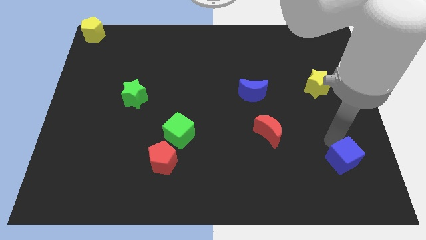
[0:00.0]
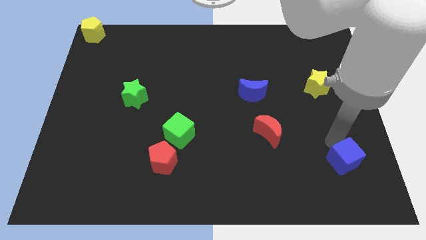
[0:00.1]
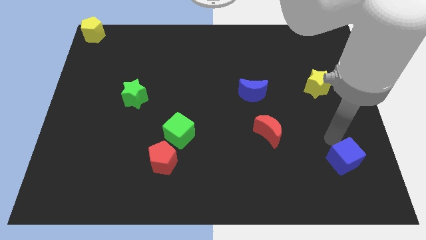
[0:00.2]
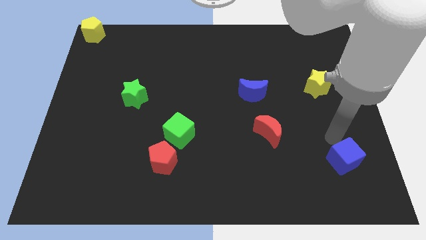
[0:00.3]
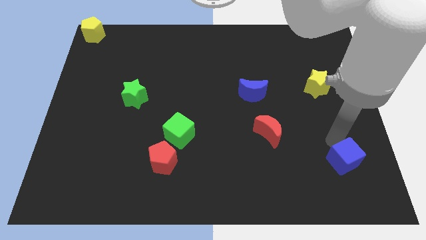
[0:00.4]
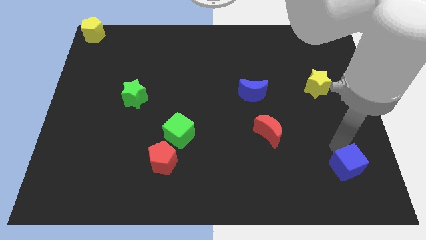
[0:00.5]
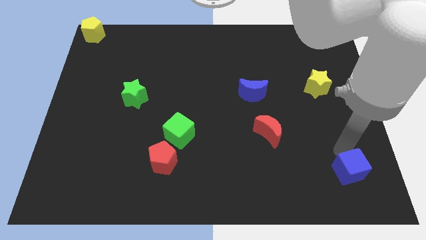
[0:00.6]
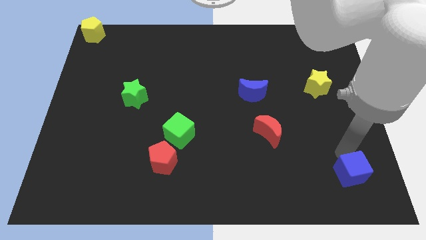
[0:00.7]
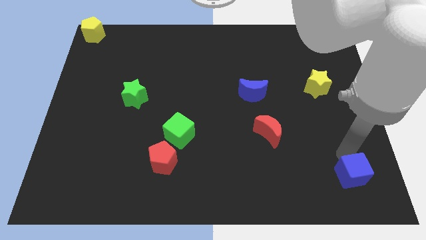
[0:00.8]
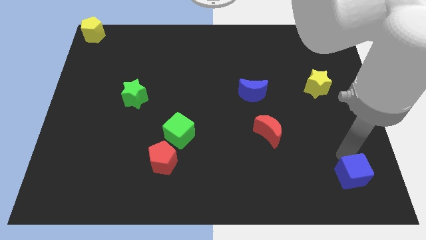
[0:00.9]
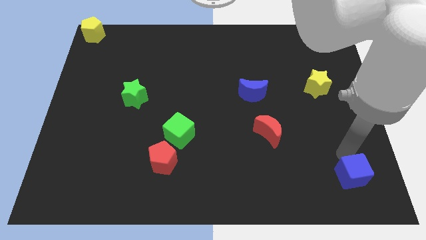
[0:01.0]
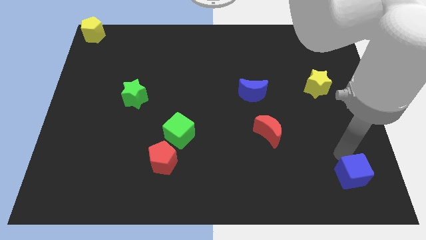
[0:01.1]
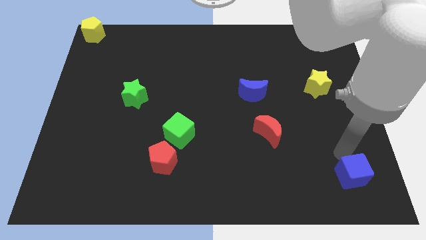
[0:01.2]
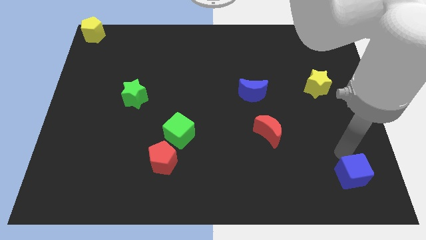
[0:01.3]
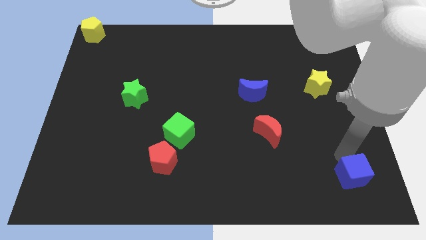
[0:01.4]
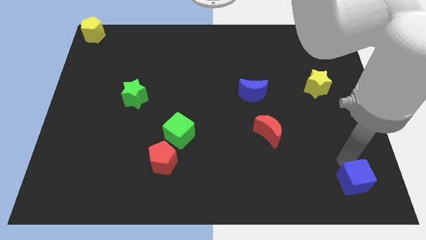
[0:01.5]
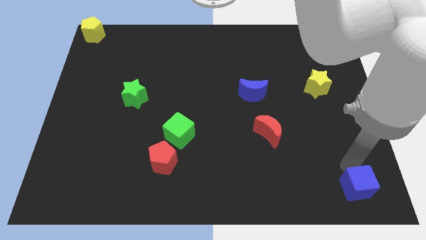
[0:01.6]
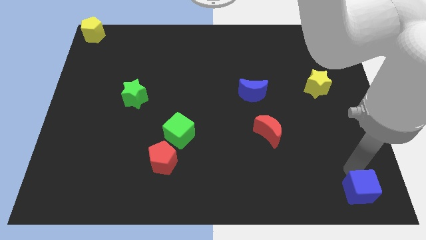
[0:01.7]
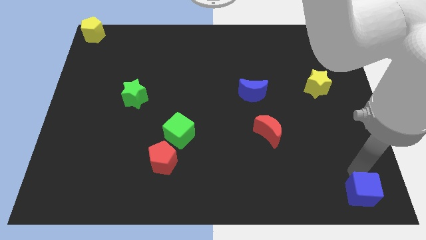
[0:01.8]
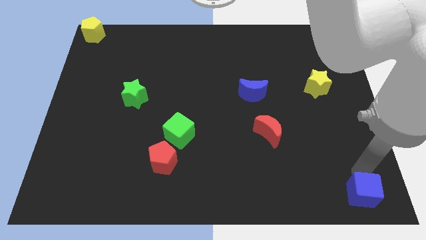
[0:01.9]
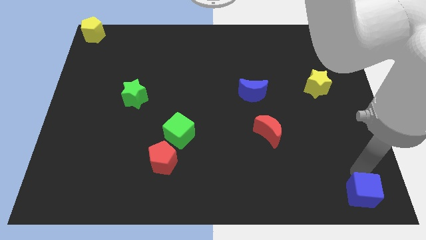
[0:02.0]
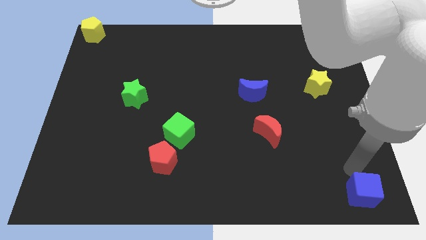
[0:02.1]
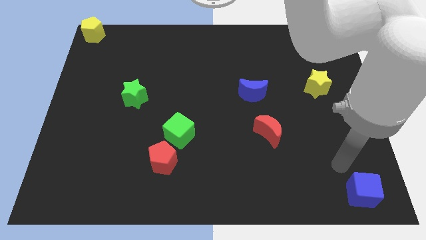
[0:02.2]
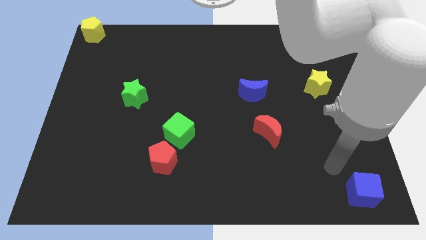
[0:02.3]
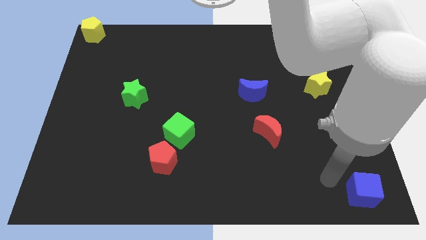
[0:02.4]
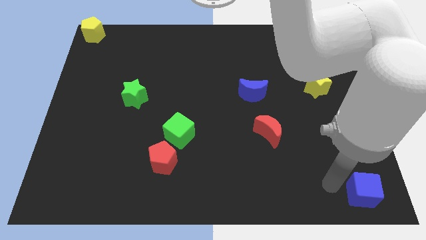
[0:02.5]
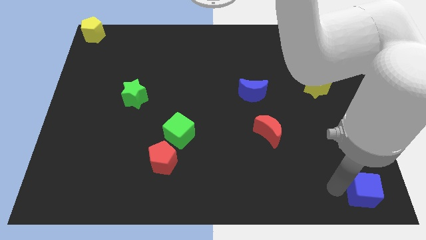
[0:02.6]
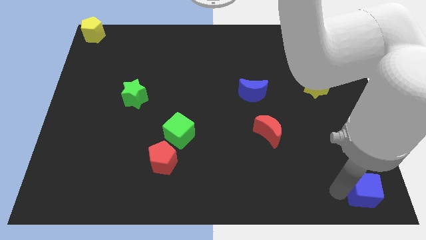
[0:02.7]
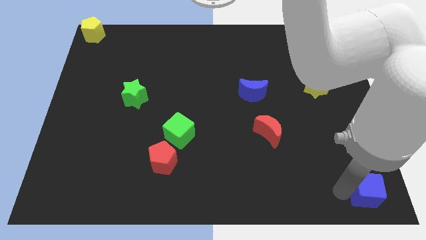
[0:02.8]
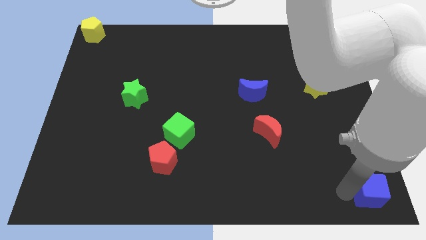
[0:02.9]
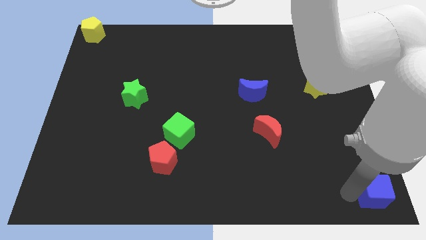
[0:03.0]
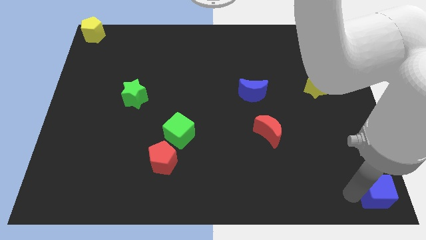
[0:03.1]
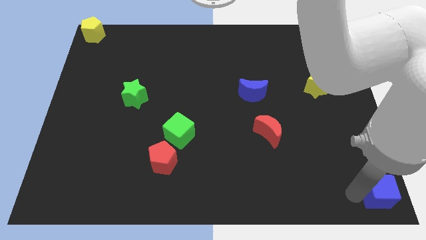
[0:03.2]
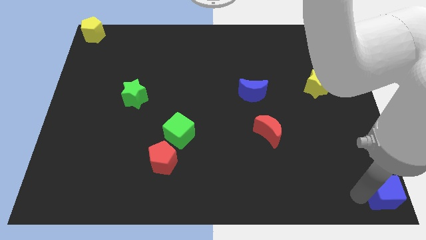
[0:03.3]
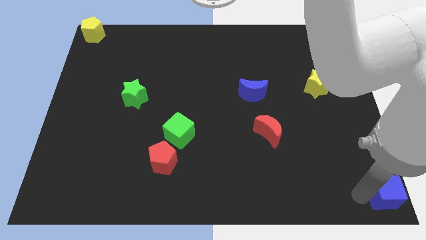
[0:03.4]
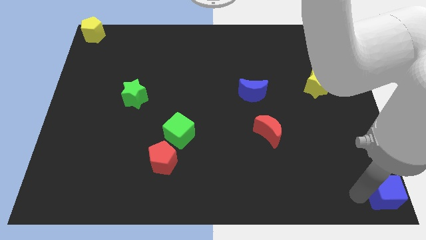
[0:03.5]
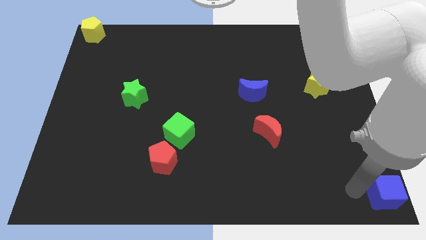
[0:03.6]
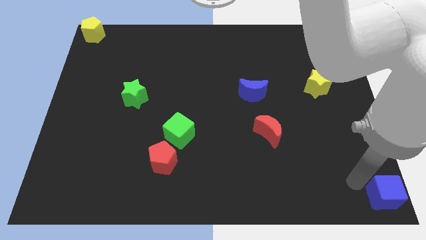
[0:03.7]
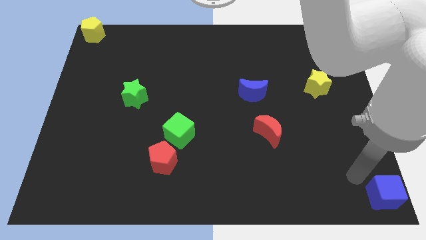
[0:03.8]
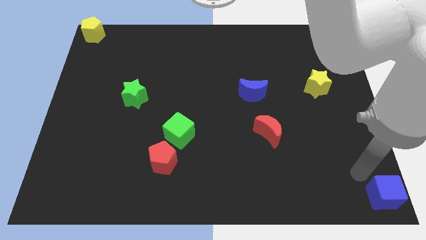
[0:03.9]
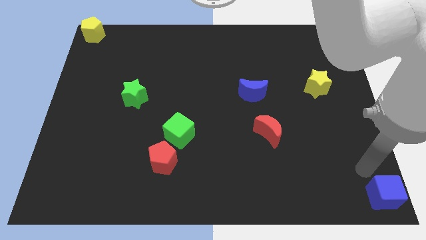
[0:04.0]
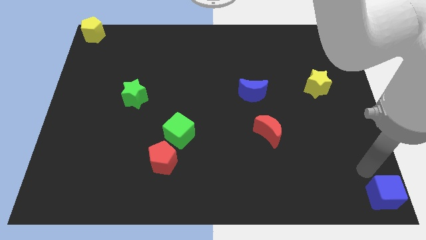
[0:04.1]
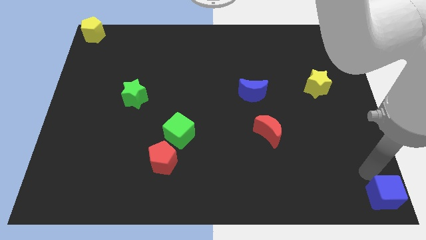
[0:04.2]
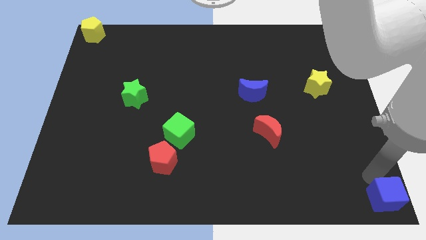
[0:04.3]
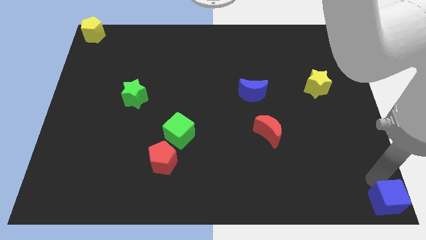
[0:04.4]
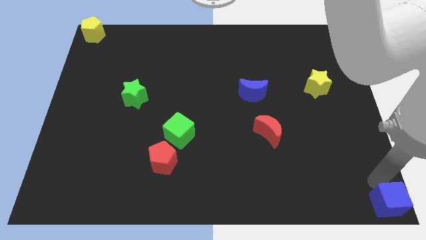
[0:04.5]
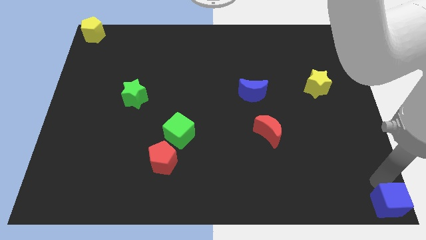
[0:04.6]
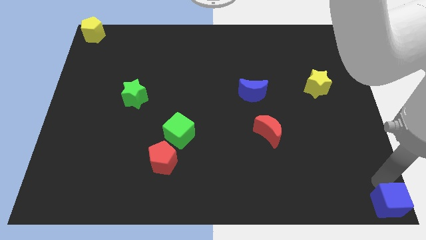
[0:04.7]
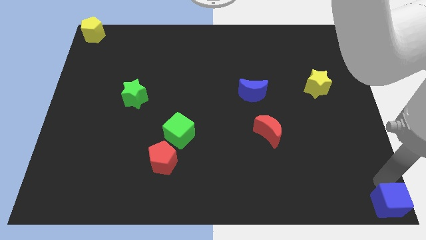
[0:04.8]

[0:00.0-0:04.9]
place blue cube at the bottom right corner of the board

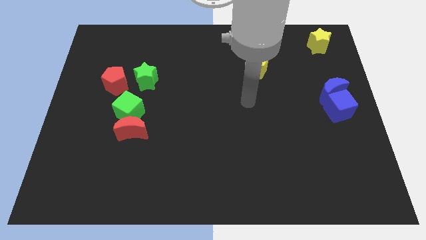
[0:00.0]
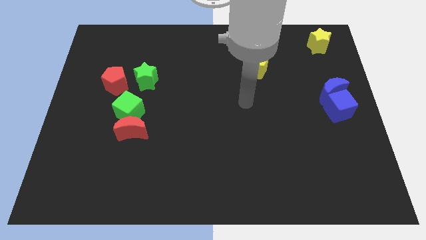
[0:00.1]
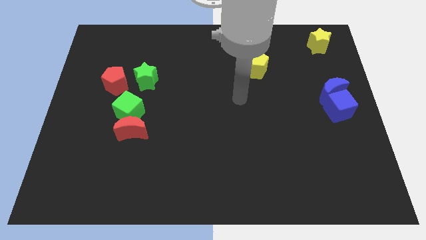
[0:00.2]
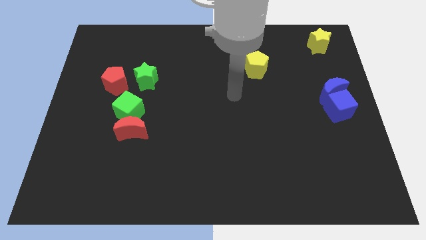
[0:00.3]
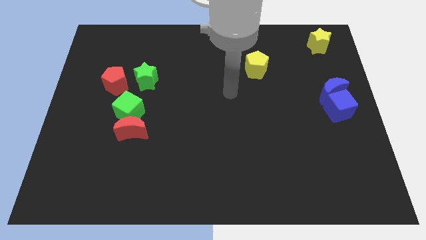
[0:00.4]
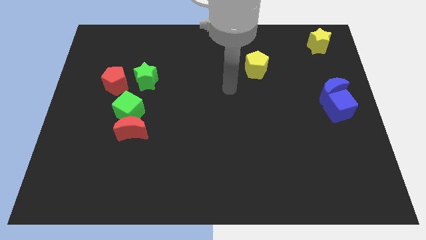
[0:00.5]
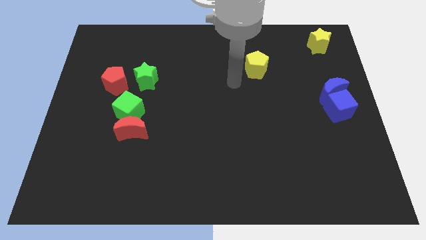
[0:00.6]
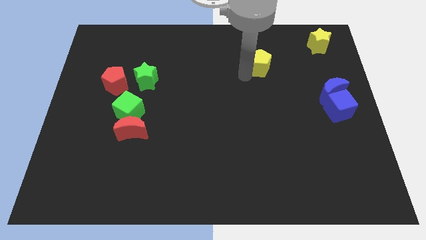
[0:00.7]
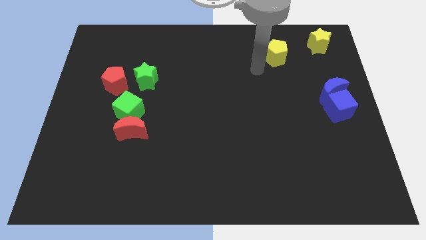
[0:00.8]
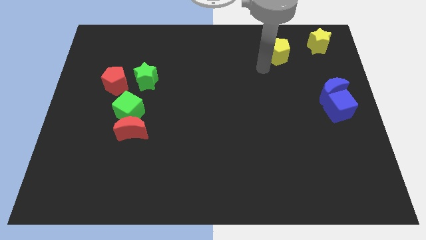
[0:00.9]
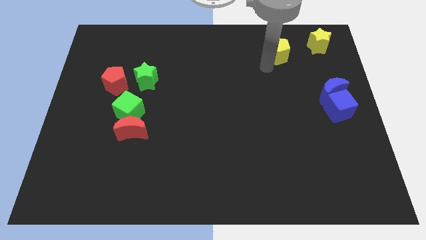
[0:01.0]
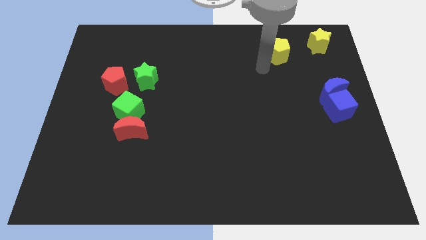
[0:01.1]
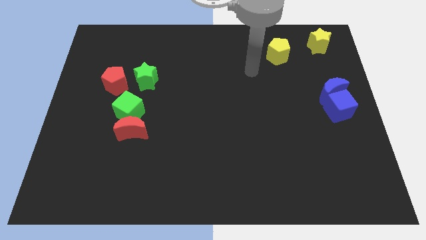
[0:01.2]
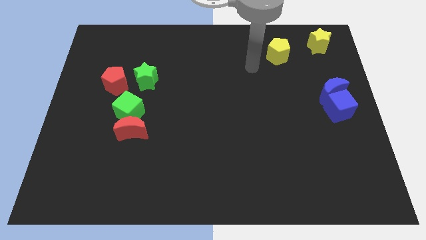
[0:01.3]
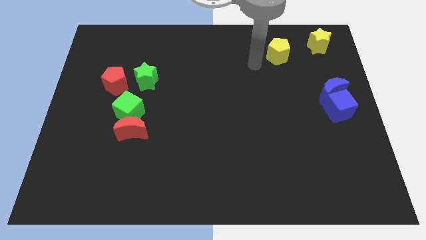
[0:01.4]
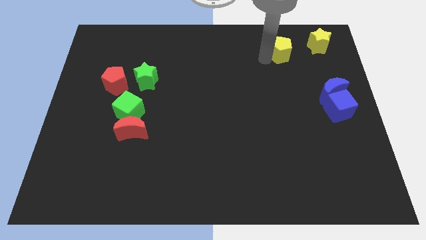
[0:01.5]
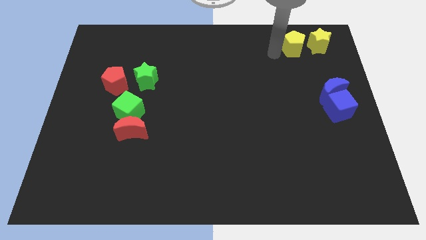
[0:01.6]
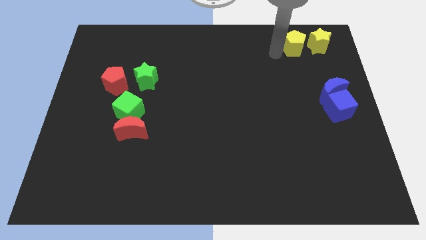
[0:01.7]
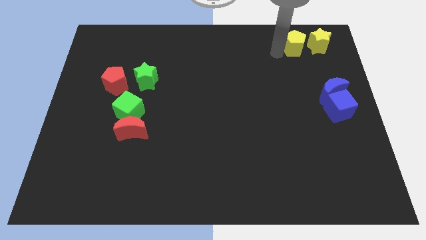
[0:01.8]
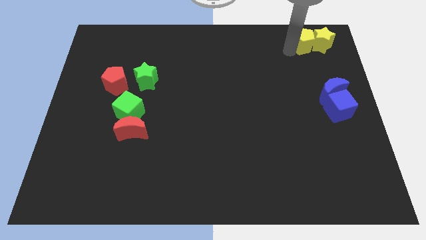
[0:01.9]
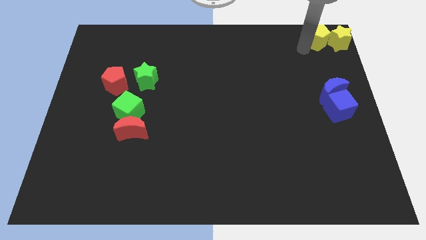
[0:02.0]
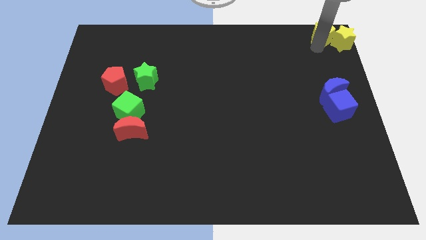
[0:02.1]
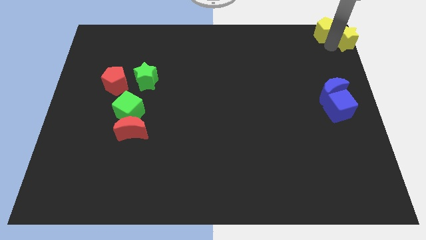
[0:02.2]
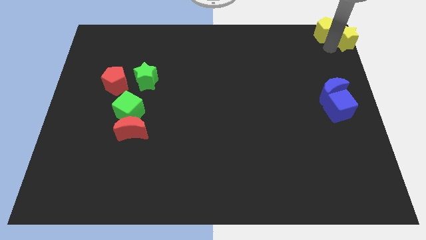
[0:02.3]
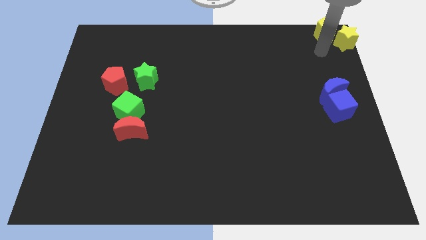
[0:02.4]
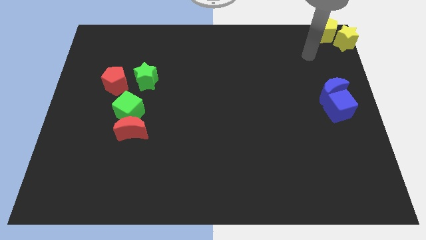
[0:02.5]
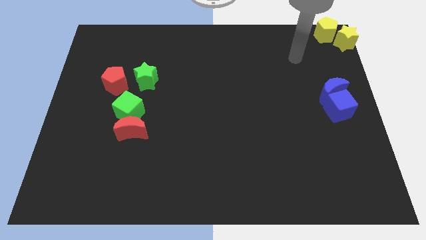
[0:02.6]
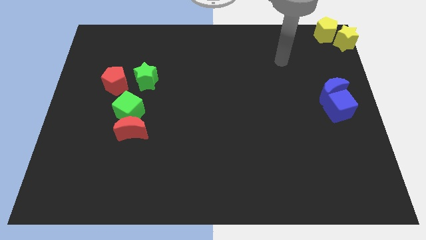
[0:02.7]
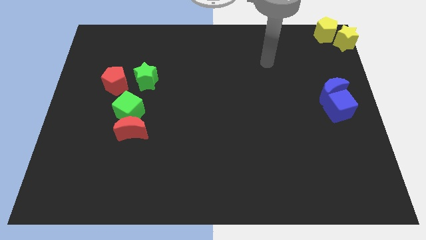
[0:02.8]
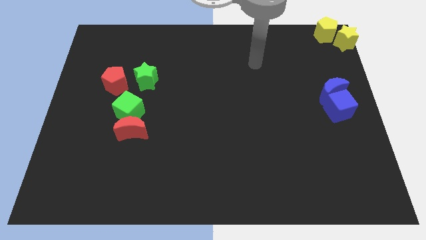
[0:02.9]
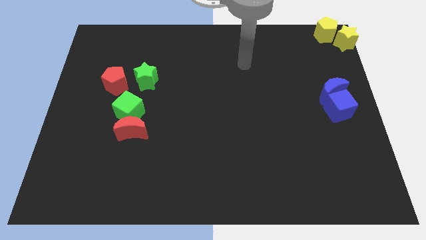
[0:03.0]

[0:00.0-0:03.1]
move the yellow pentagon into the yellow star to the top right right corner

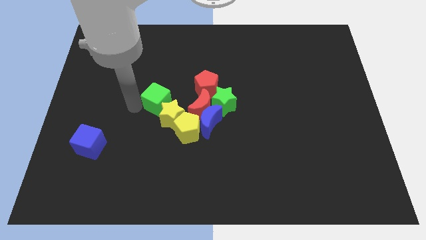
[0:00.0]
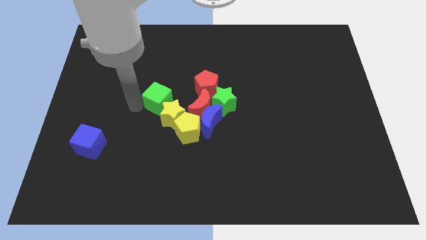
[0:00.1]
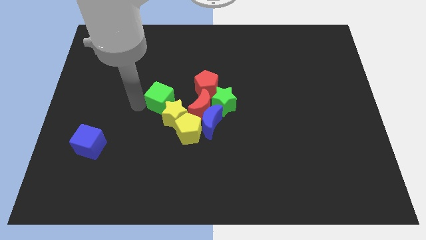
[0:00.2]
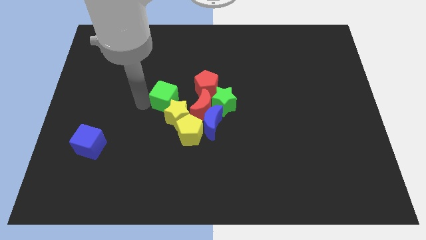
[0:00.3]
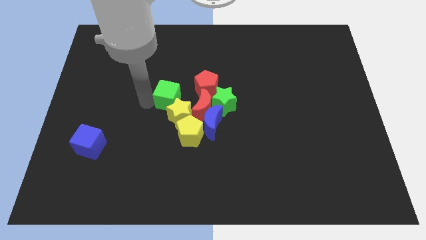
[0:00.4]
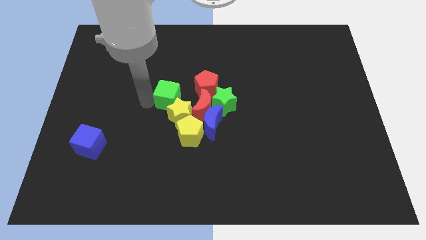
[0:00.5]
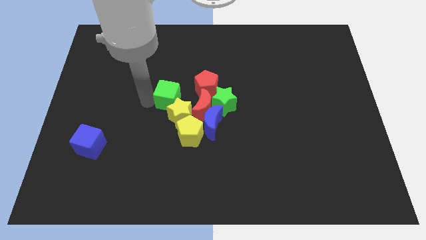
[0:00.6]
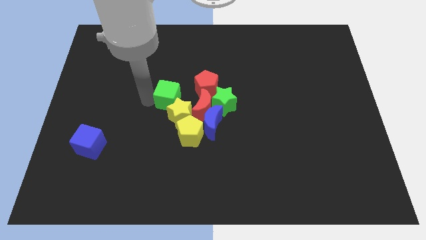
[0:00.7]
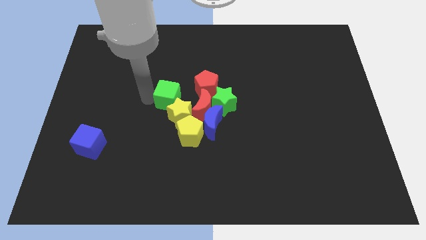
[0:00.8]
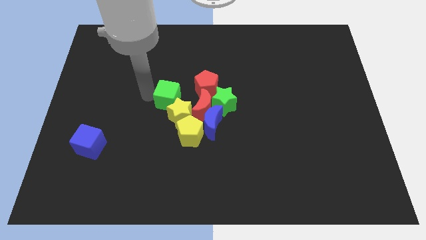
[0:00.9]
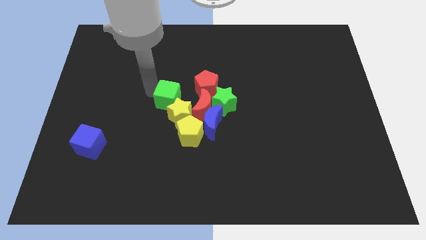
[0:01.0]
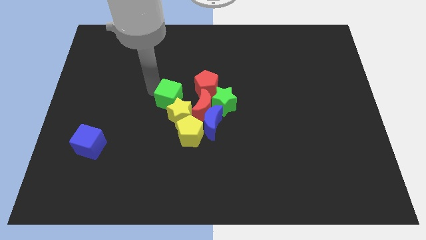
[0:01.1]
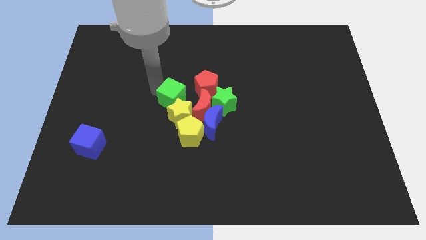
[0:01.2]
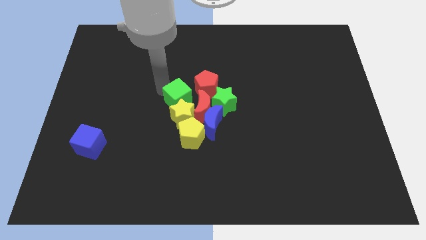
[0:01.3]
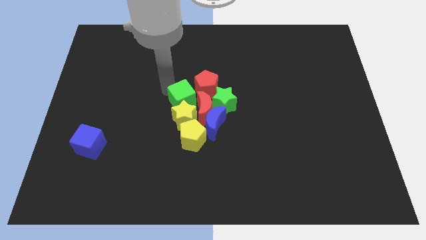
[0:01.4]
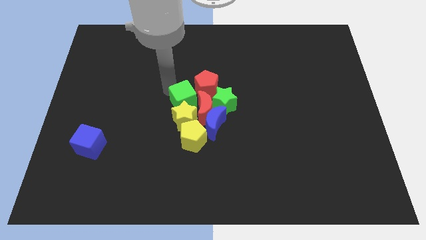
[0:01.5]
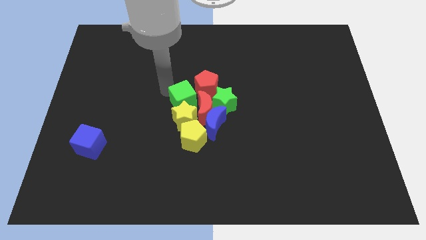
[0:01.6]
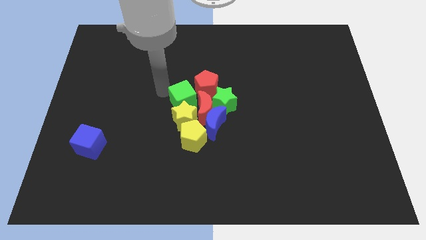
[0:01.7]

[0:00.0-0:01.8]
move the green cube at the top of the yellow star
